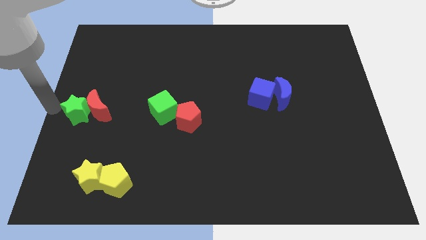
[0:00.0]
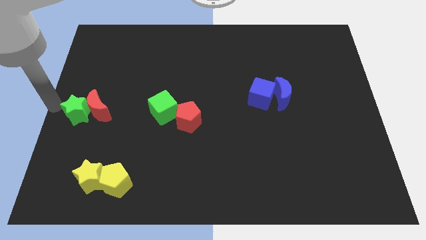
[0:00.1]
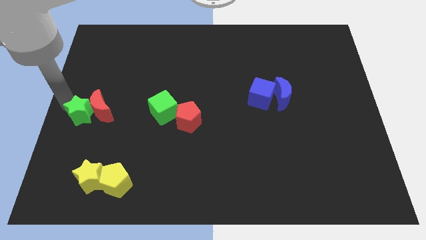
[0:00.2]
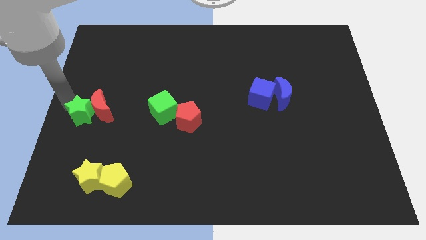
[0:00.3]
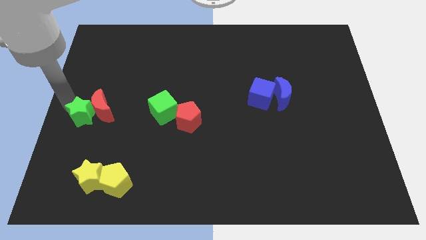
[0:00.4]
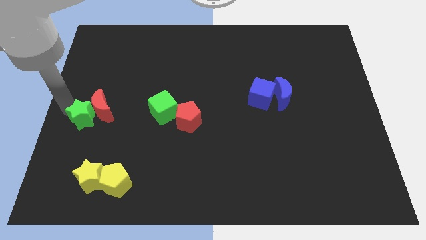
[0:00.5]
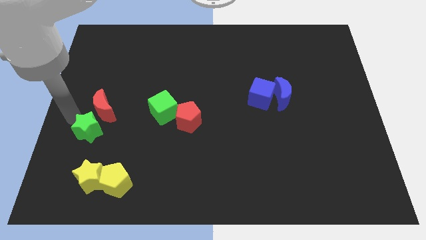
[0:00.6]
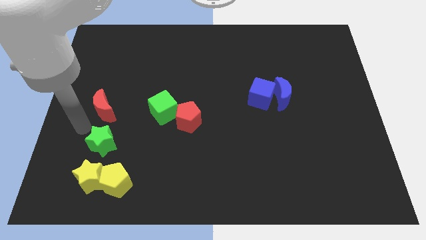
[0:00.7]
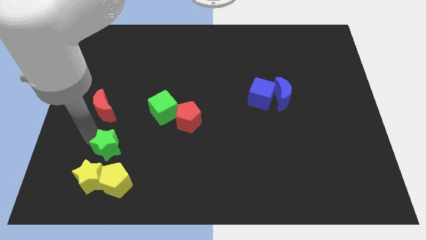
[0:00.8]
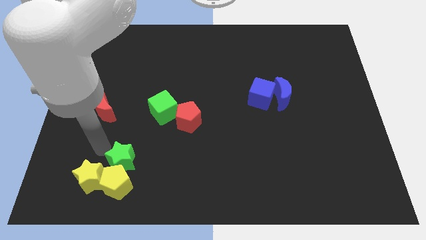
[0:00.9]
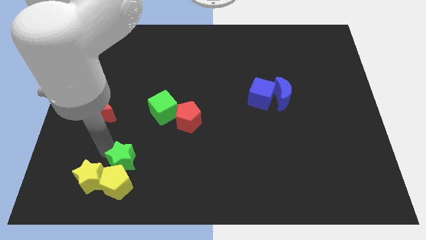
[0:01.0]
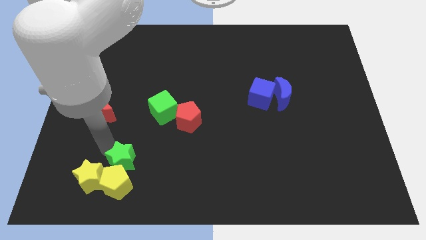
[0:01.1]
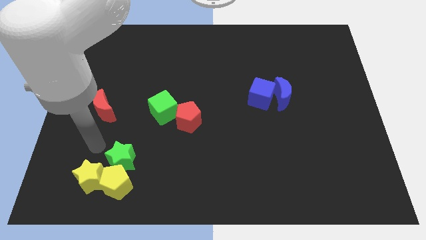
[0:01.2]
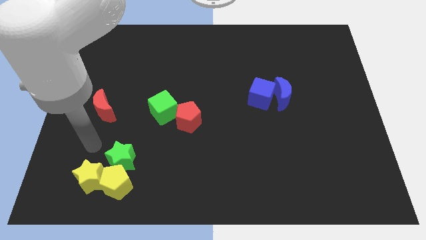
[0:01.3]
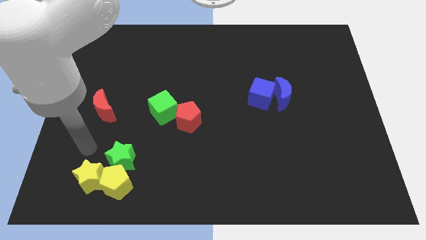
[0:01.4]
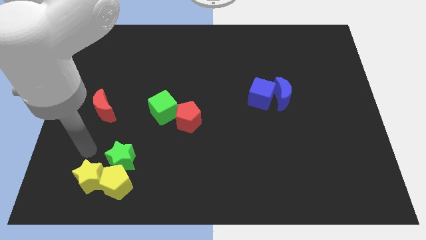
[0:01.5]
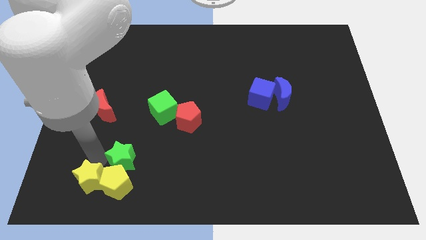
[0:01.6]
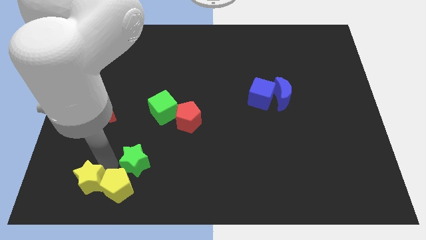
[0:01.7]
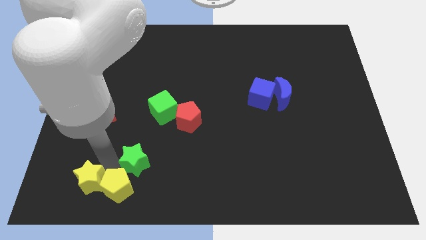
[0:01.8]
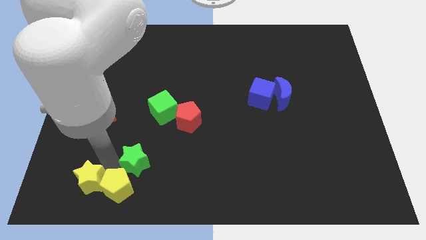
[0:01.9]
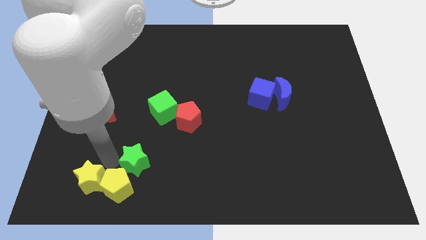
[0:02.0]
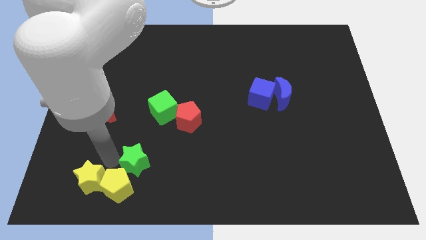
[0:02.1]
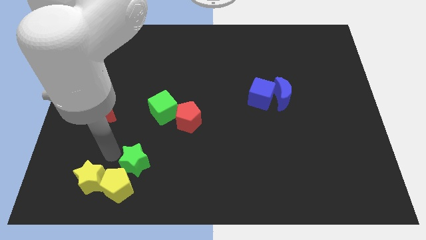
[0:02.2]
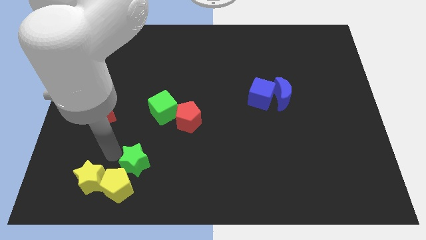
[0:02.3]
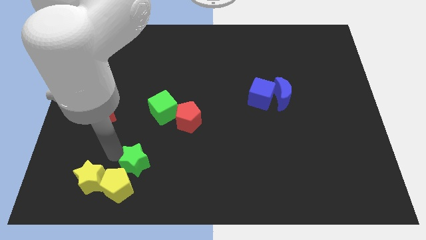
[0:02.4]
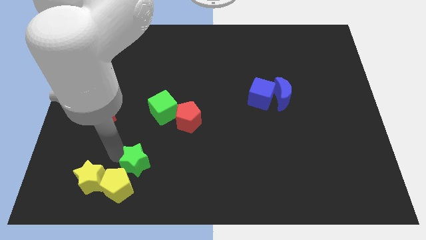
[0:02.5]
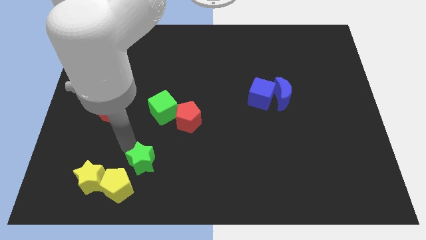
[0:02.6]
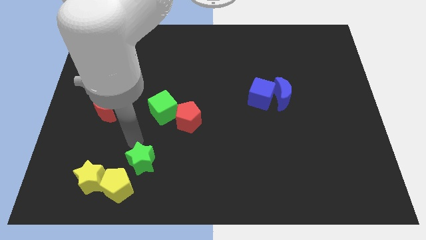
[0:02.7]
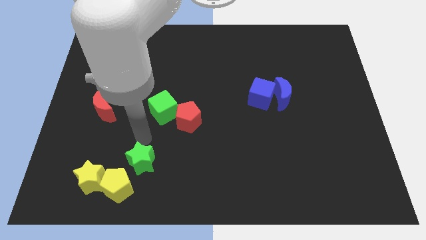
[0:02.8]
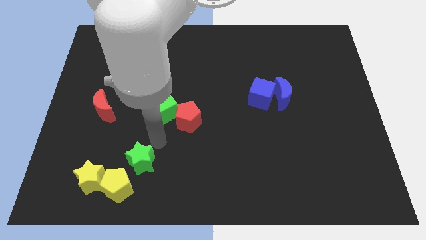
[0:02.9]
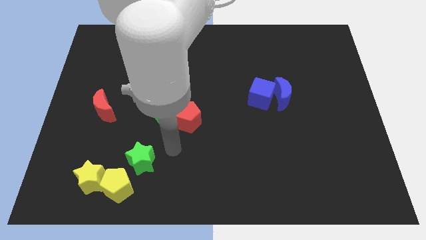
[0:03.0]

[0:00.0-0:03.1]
place the green star below green cube

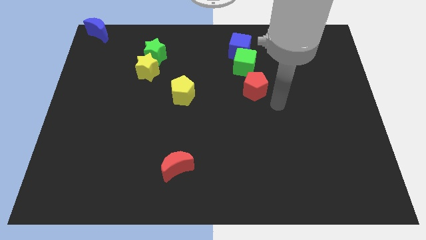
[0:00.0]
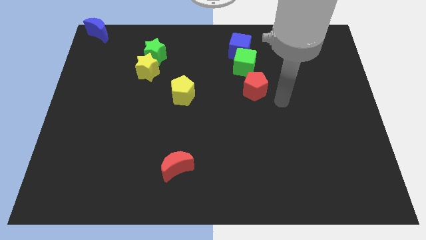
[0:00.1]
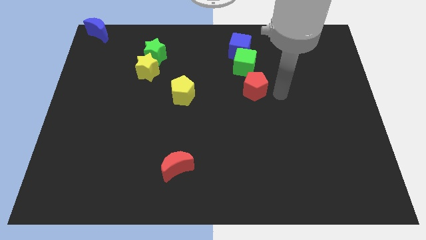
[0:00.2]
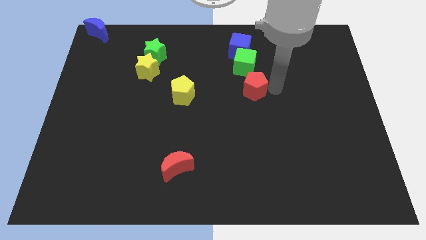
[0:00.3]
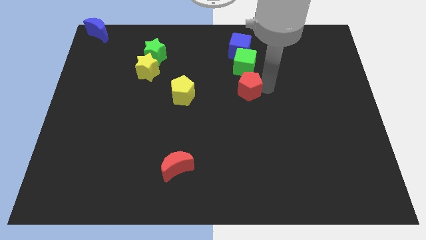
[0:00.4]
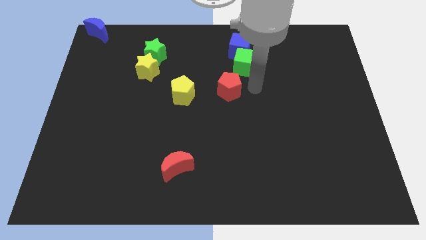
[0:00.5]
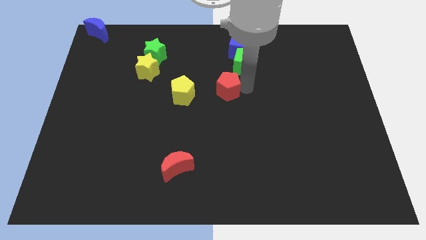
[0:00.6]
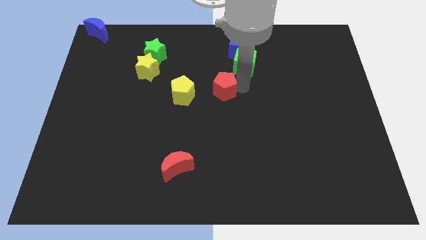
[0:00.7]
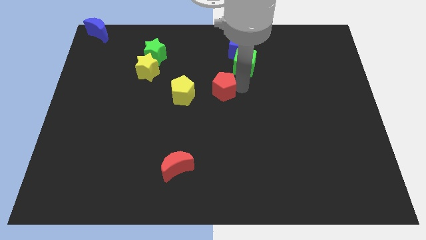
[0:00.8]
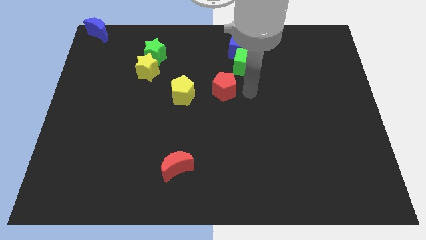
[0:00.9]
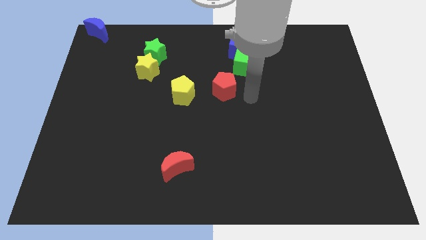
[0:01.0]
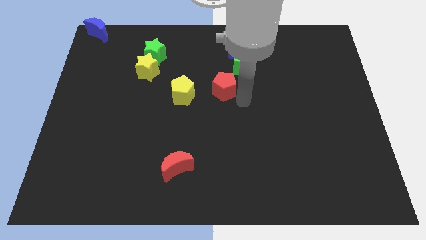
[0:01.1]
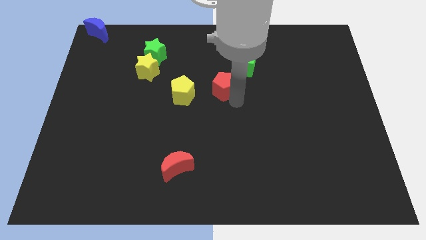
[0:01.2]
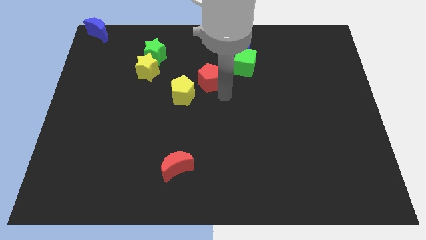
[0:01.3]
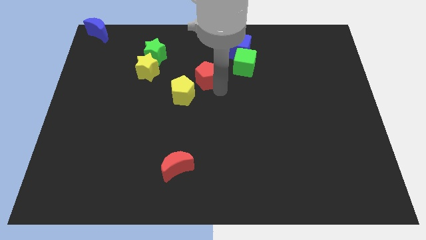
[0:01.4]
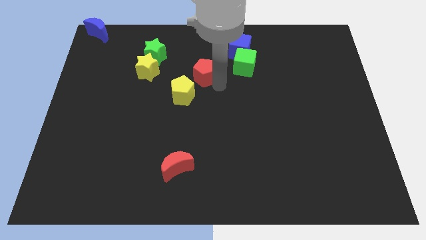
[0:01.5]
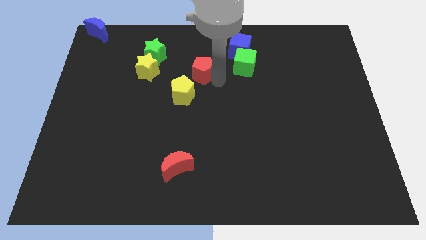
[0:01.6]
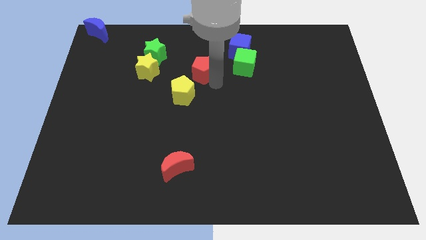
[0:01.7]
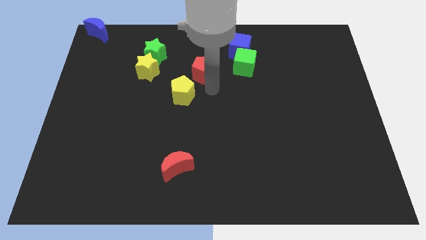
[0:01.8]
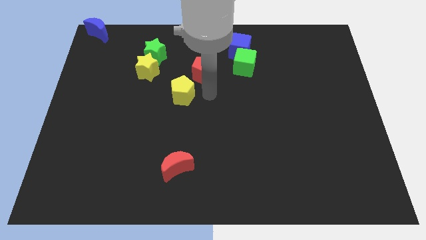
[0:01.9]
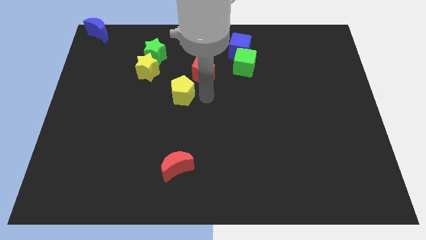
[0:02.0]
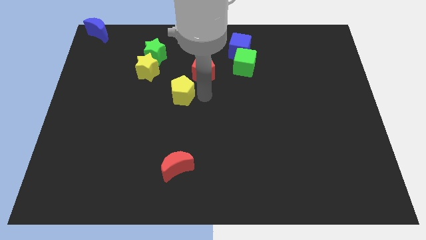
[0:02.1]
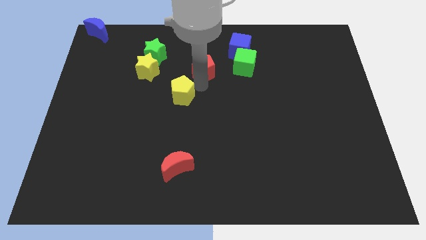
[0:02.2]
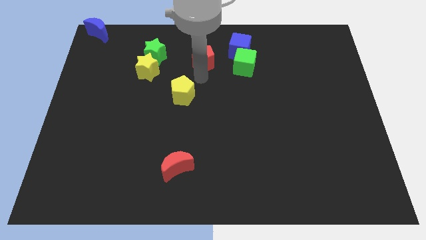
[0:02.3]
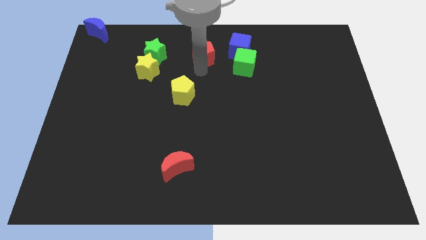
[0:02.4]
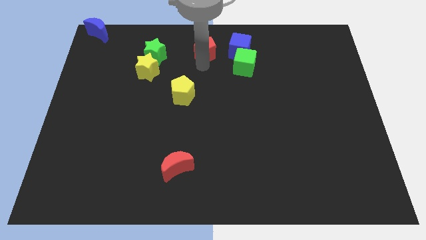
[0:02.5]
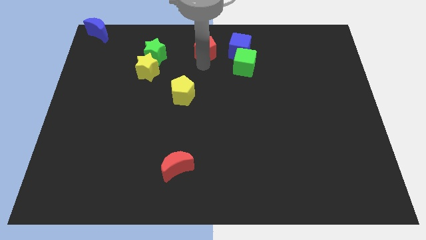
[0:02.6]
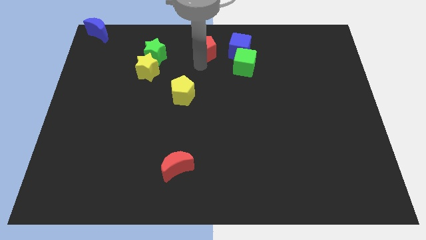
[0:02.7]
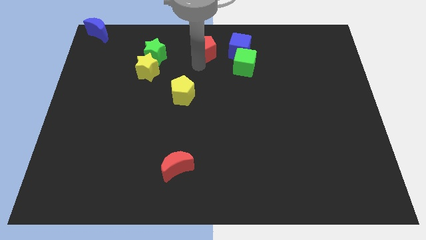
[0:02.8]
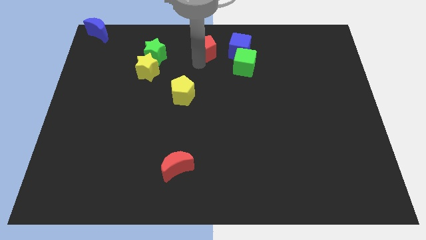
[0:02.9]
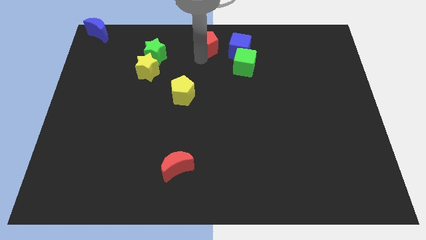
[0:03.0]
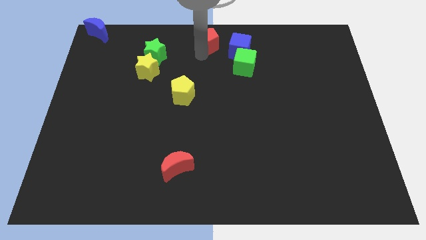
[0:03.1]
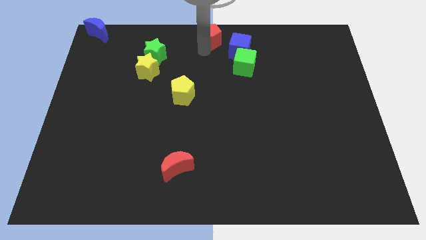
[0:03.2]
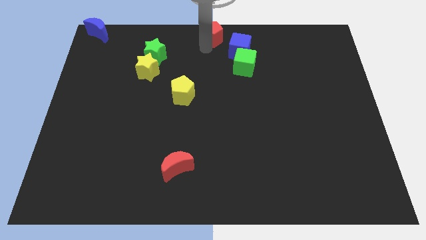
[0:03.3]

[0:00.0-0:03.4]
slide the red pentagon to top center of the board

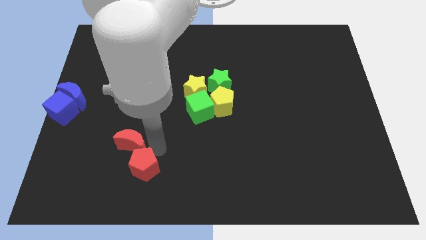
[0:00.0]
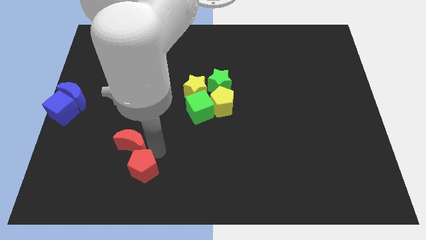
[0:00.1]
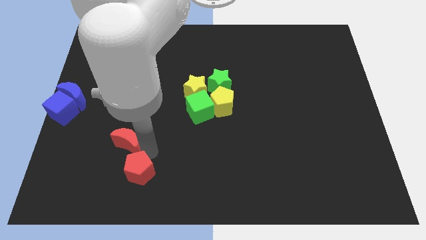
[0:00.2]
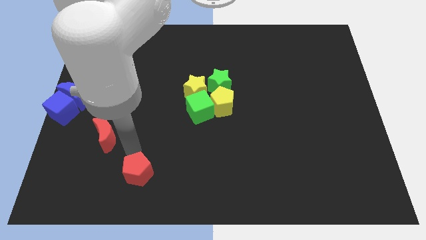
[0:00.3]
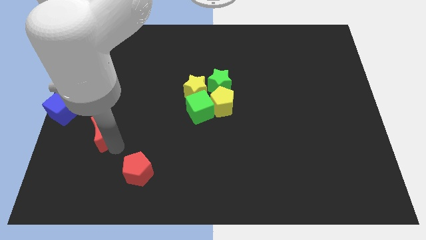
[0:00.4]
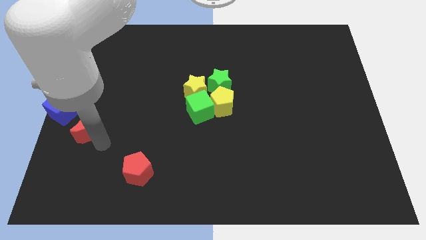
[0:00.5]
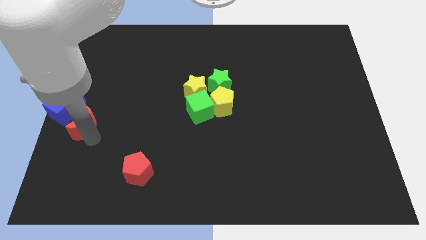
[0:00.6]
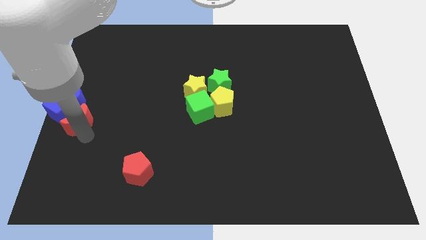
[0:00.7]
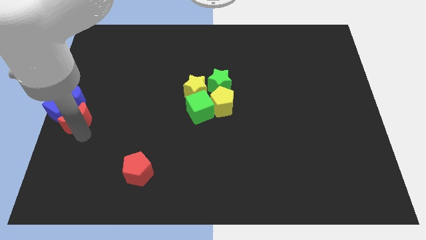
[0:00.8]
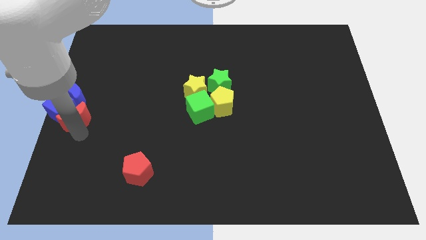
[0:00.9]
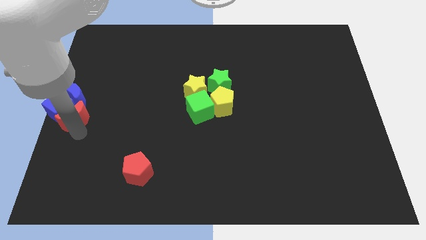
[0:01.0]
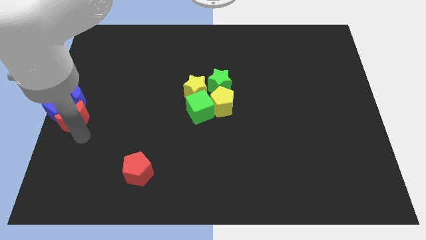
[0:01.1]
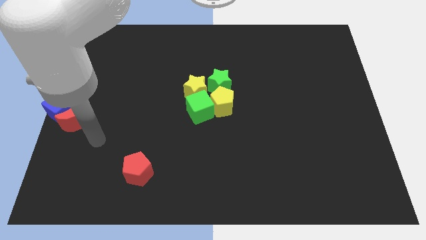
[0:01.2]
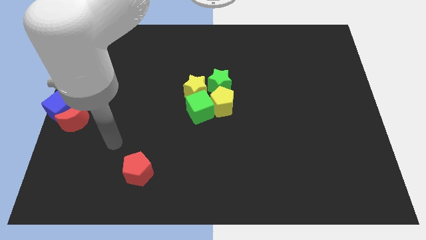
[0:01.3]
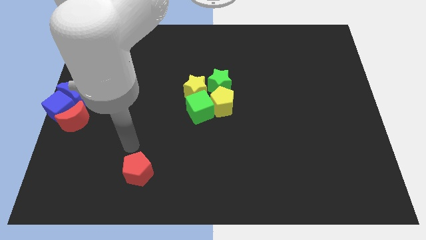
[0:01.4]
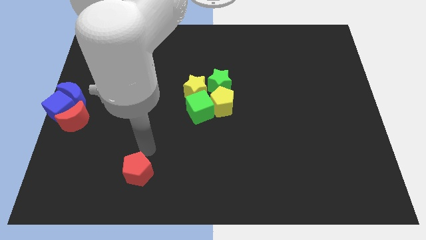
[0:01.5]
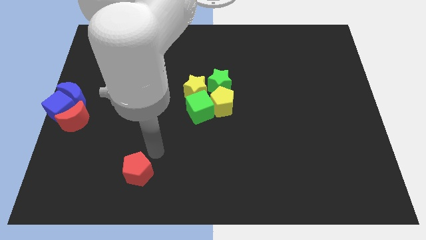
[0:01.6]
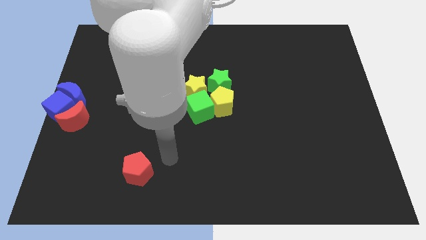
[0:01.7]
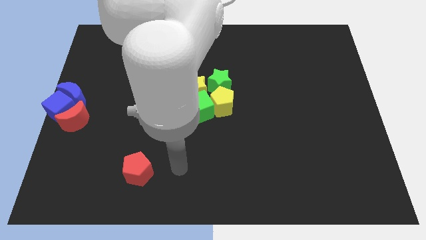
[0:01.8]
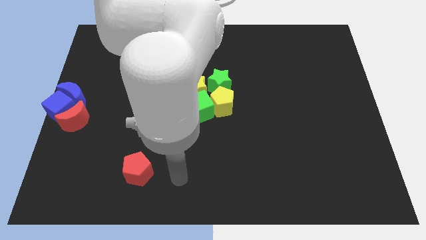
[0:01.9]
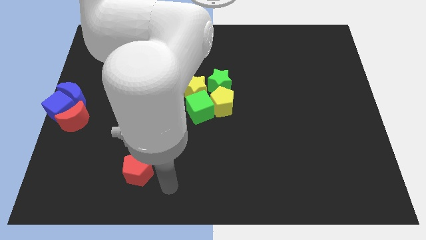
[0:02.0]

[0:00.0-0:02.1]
move red moon close to the blue cube and blue moon

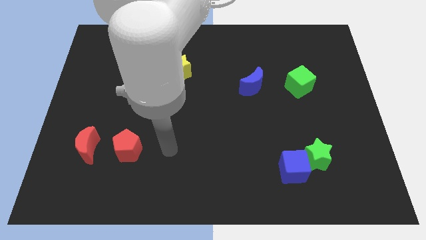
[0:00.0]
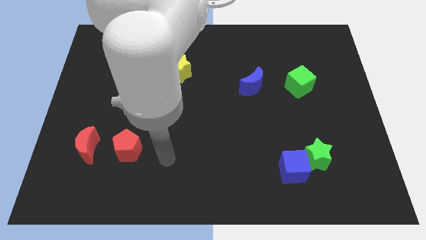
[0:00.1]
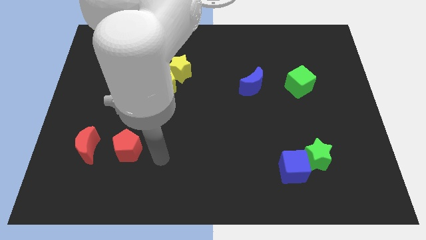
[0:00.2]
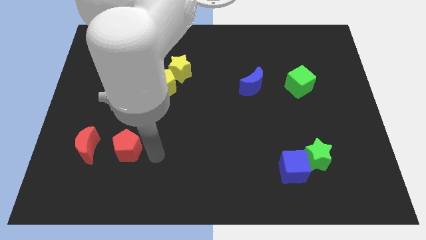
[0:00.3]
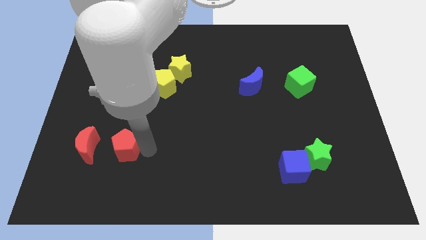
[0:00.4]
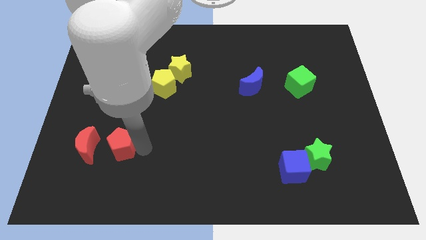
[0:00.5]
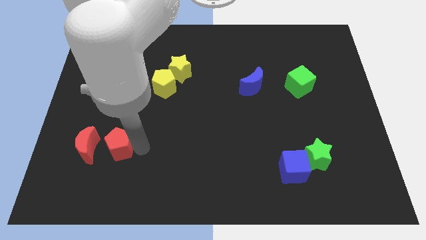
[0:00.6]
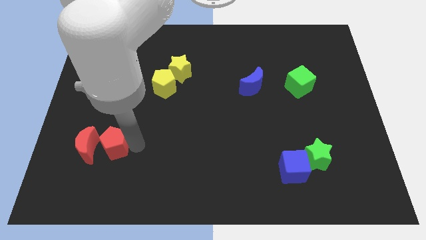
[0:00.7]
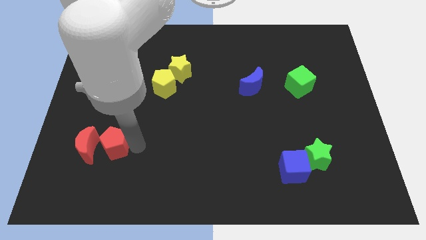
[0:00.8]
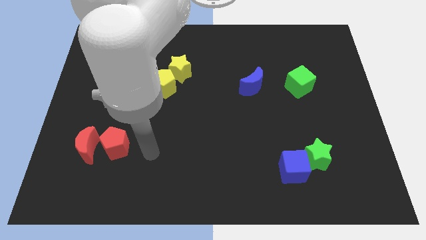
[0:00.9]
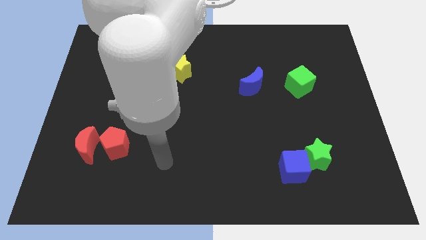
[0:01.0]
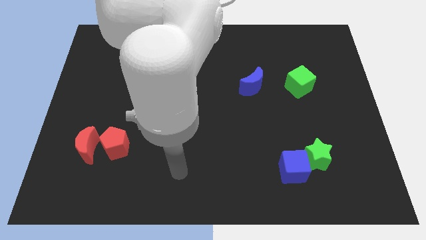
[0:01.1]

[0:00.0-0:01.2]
move red pentagon close to the red moon
